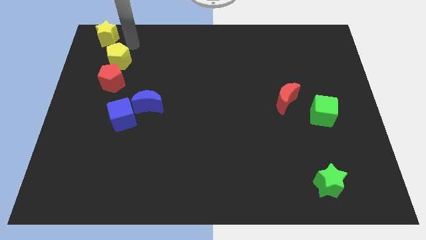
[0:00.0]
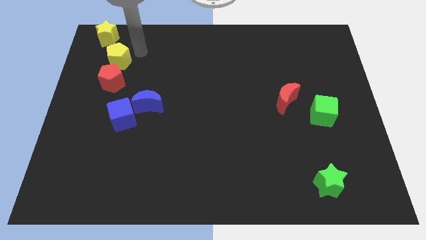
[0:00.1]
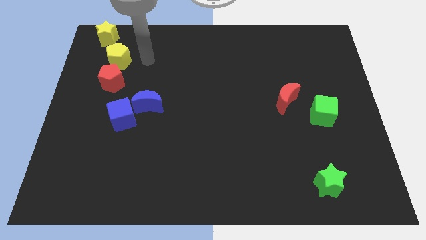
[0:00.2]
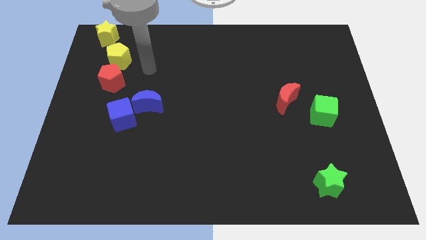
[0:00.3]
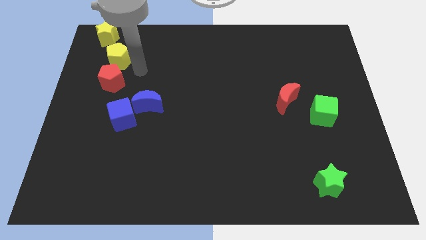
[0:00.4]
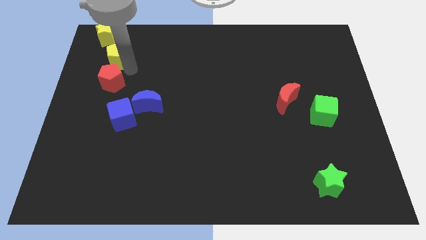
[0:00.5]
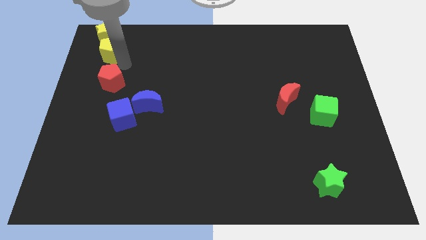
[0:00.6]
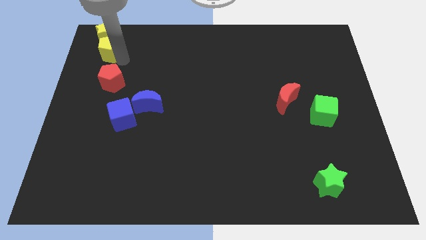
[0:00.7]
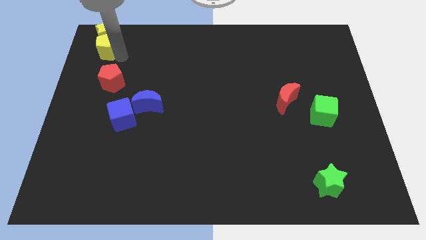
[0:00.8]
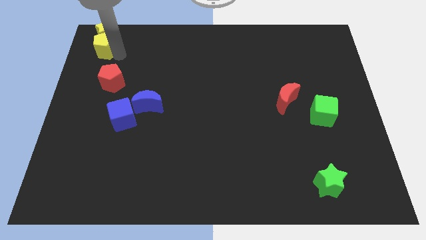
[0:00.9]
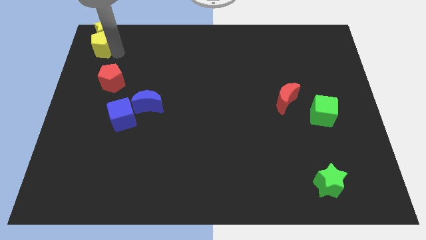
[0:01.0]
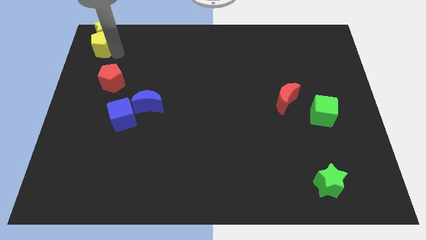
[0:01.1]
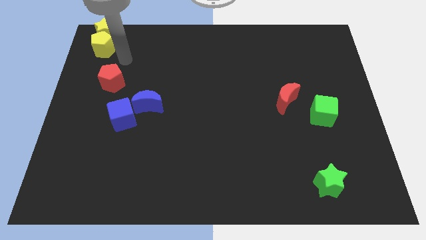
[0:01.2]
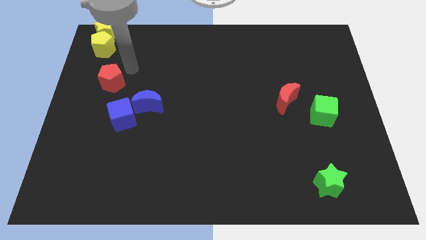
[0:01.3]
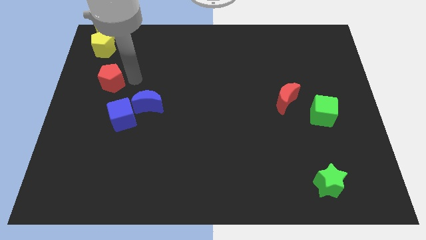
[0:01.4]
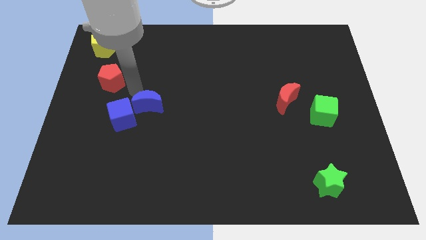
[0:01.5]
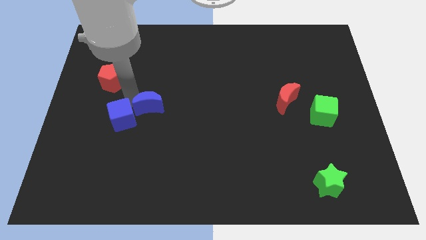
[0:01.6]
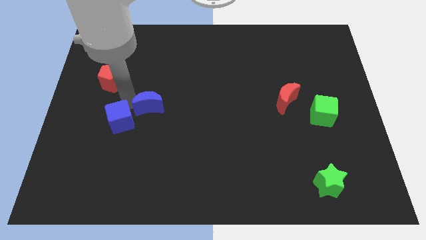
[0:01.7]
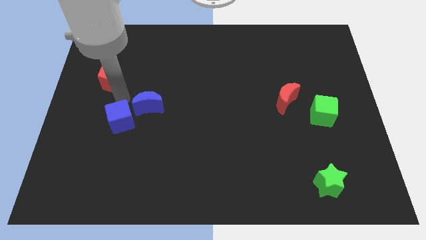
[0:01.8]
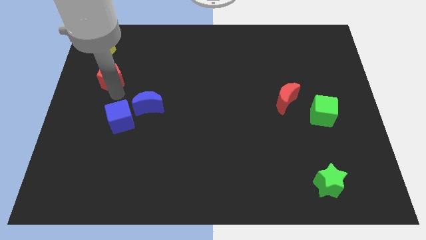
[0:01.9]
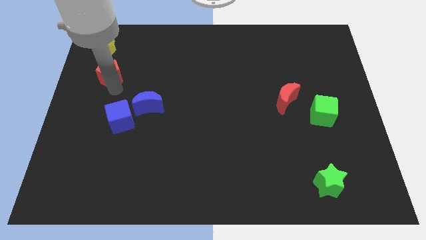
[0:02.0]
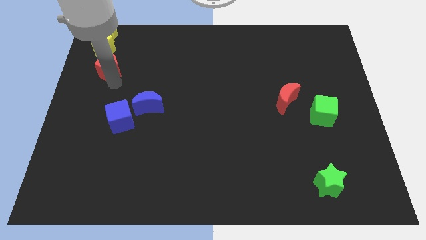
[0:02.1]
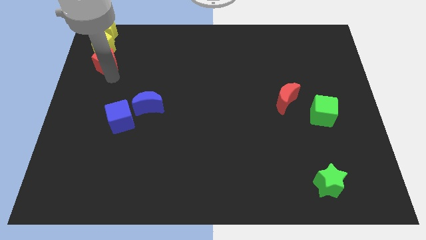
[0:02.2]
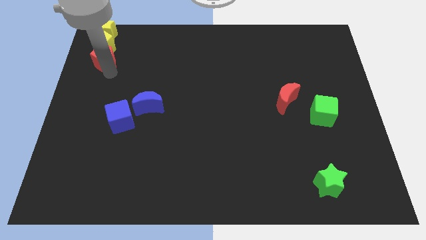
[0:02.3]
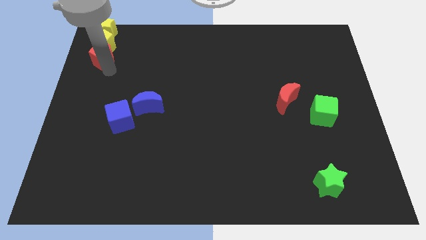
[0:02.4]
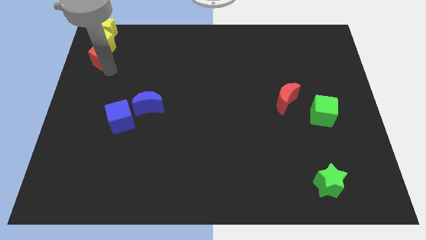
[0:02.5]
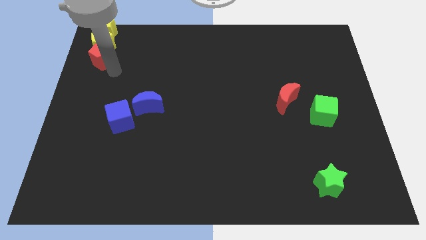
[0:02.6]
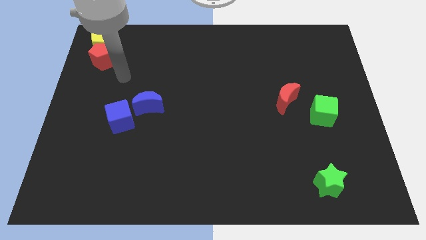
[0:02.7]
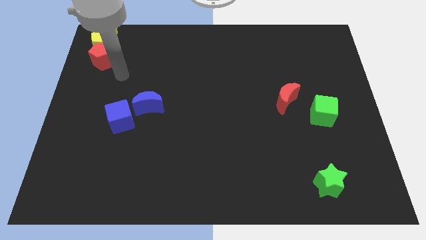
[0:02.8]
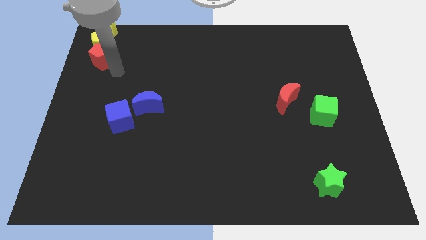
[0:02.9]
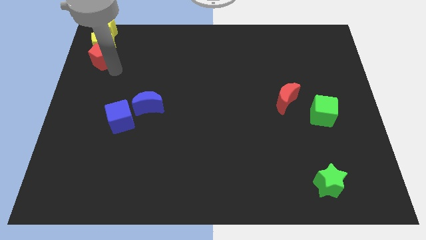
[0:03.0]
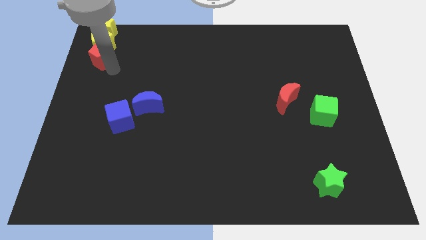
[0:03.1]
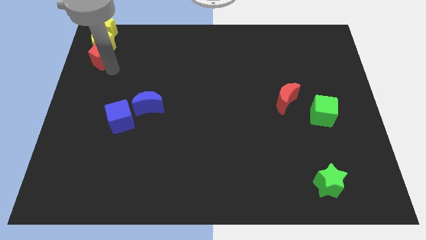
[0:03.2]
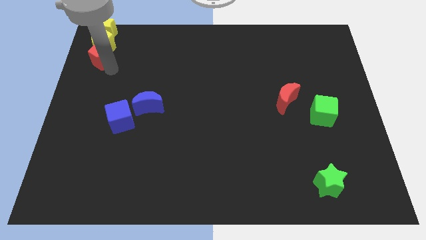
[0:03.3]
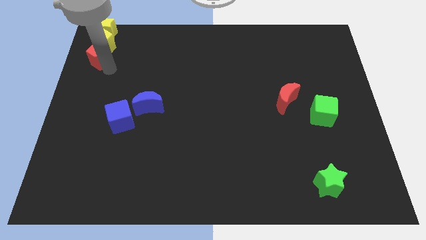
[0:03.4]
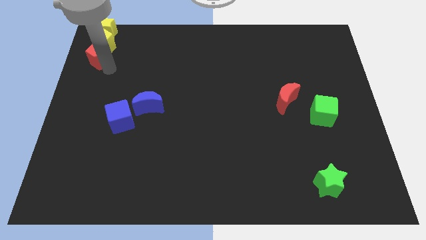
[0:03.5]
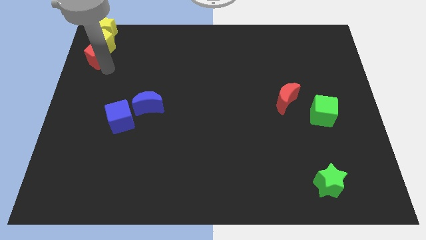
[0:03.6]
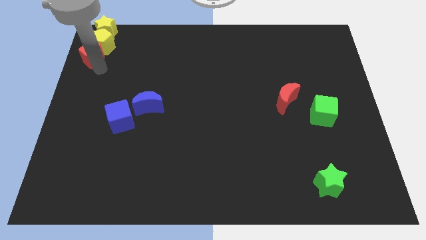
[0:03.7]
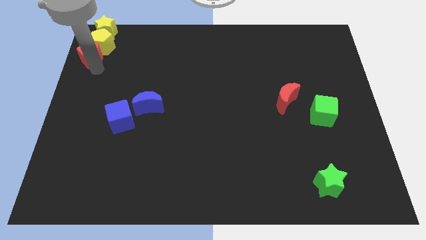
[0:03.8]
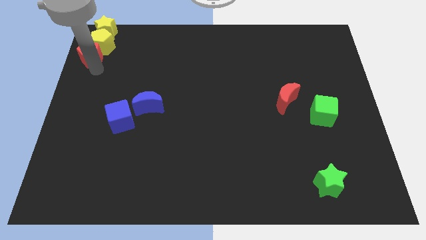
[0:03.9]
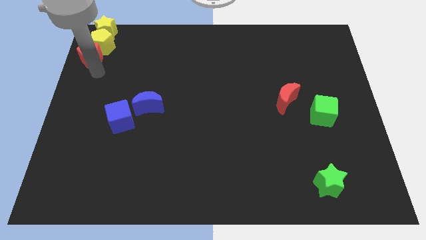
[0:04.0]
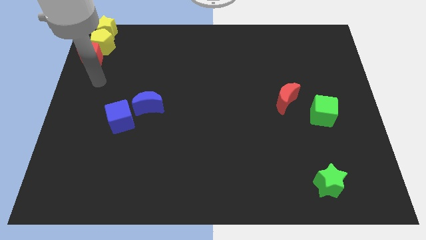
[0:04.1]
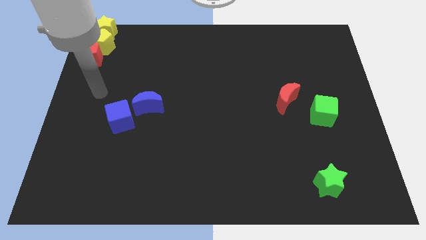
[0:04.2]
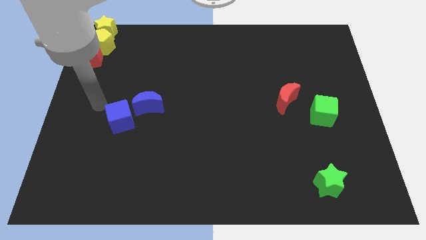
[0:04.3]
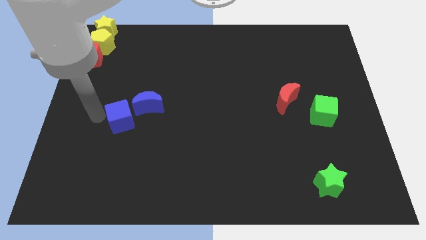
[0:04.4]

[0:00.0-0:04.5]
push the pentagons to the top left corner of the board

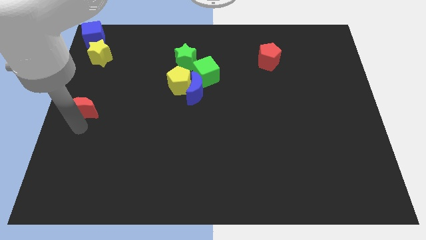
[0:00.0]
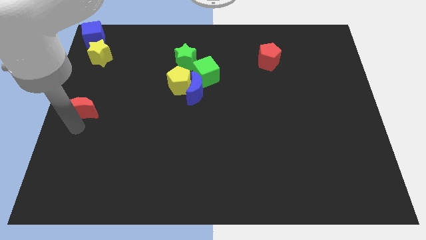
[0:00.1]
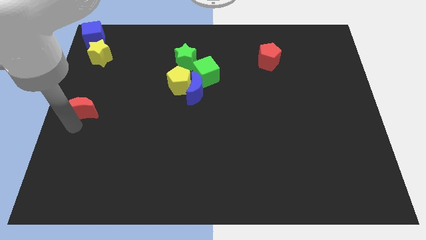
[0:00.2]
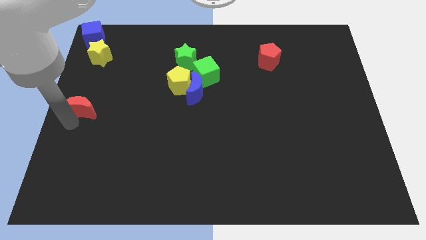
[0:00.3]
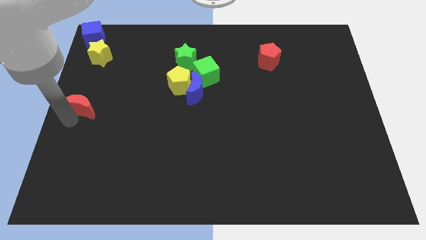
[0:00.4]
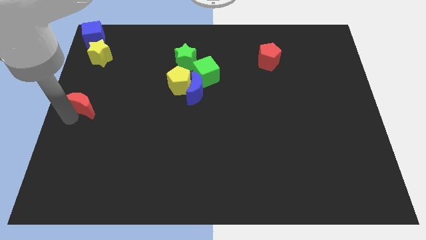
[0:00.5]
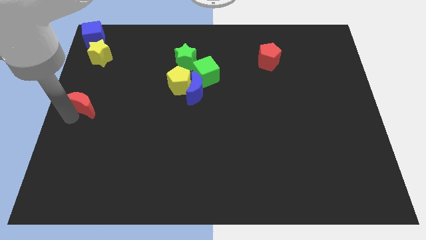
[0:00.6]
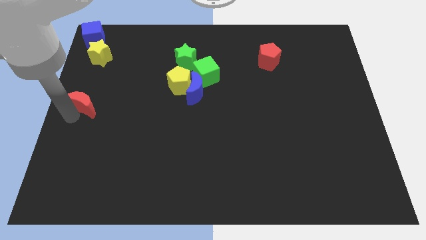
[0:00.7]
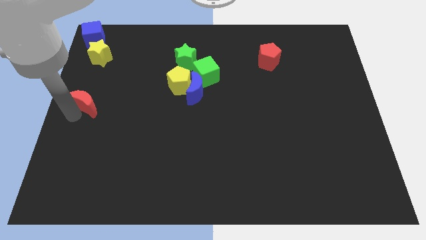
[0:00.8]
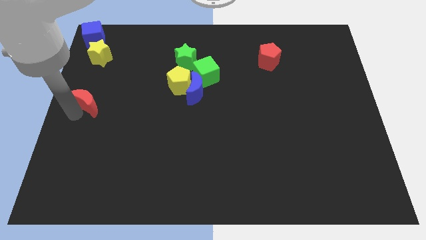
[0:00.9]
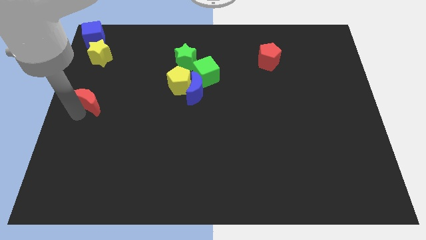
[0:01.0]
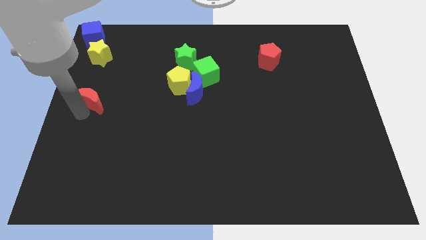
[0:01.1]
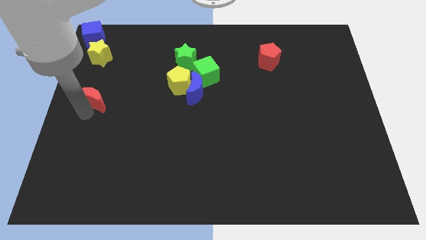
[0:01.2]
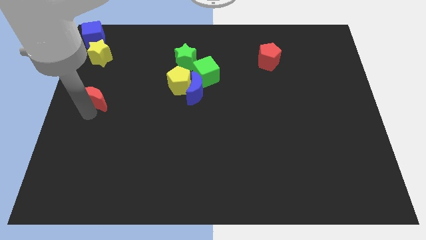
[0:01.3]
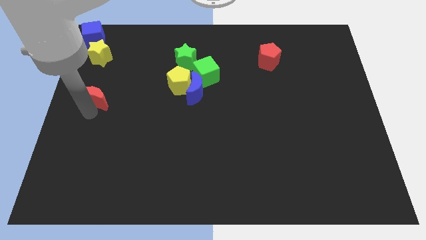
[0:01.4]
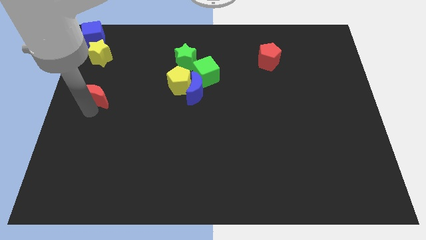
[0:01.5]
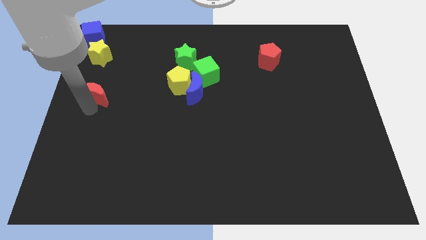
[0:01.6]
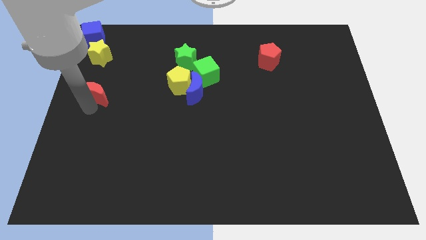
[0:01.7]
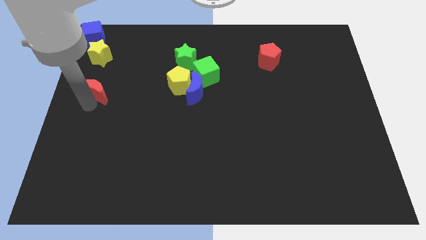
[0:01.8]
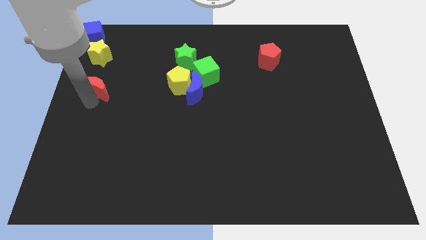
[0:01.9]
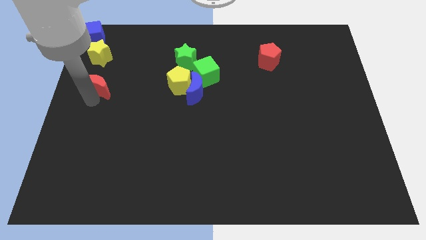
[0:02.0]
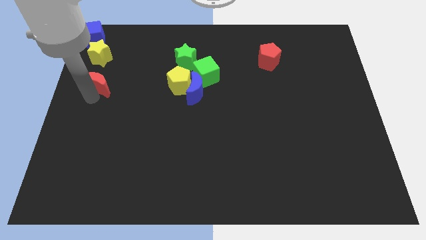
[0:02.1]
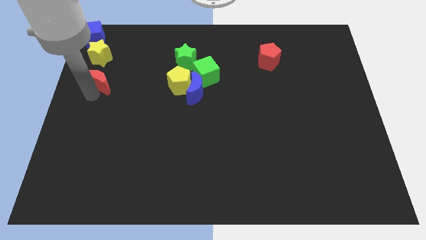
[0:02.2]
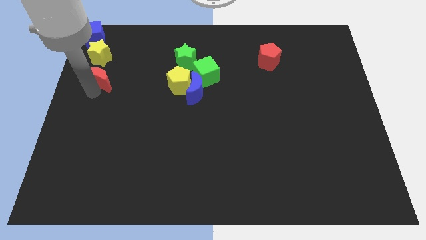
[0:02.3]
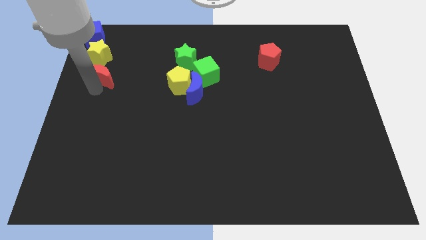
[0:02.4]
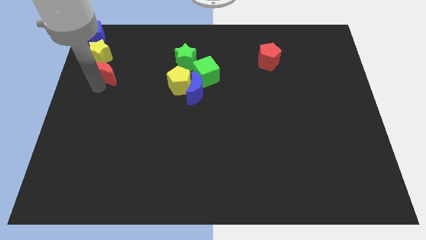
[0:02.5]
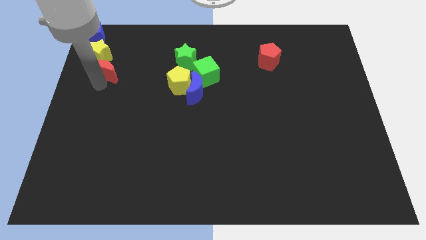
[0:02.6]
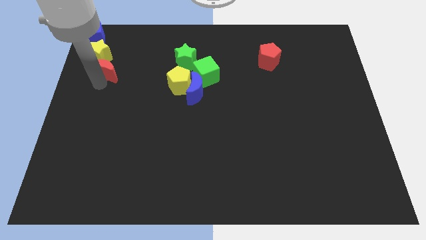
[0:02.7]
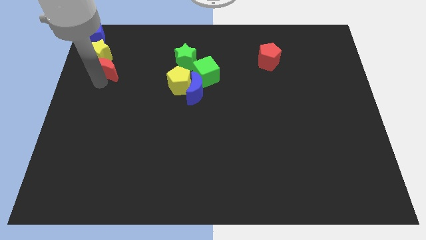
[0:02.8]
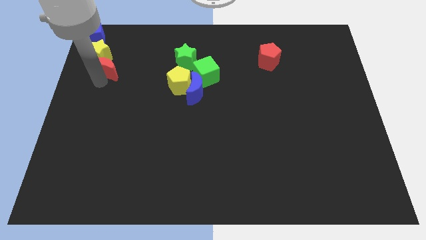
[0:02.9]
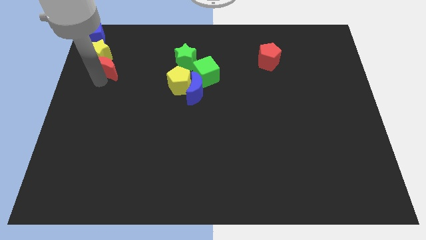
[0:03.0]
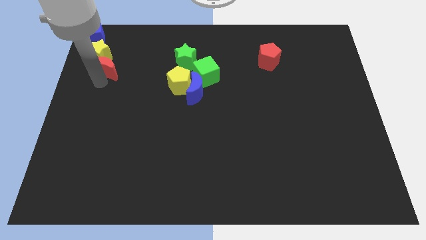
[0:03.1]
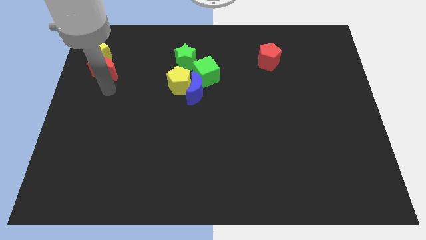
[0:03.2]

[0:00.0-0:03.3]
move red crescent diagonally below yellow star

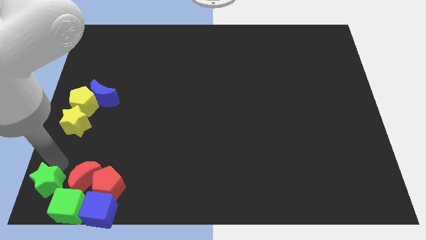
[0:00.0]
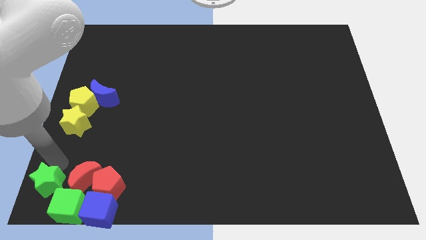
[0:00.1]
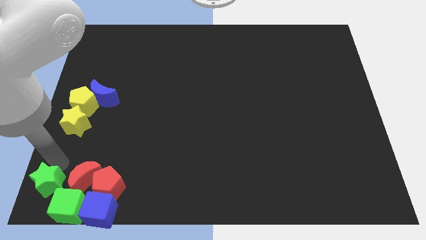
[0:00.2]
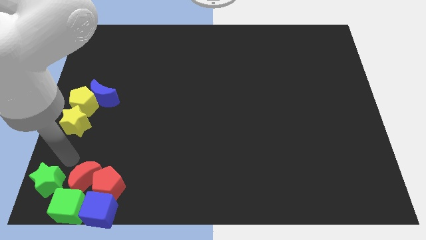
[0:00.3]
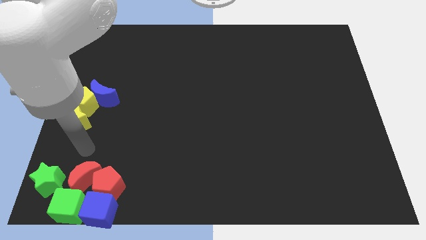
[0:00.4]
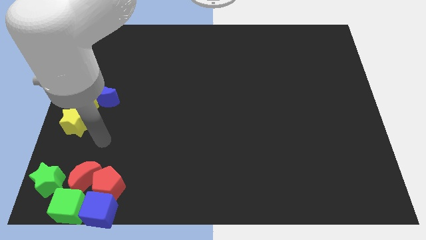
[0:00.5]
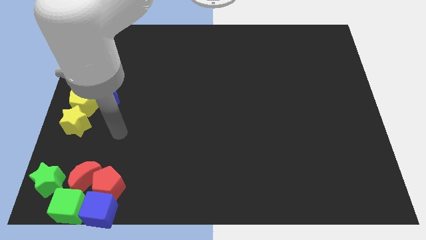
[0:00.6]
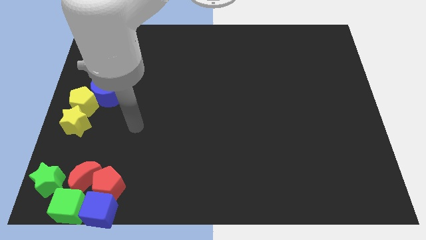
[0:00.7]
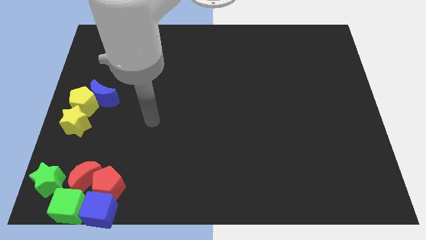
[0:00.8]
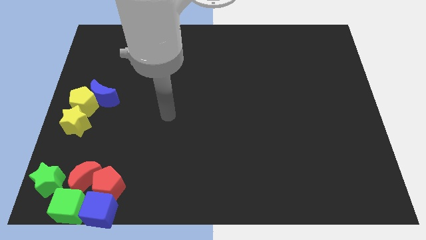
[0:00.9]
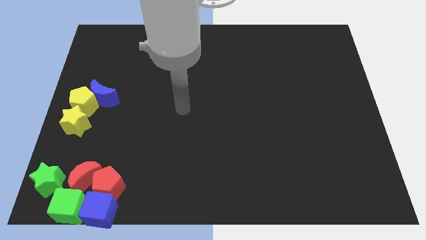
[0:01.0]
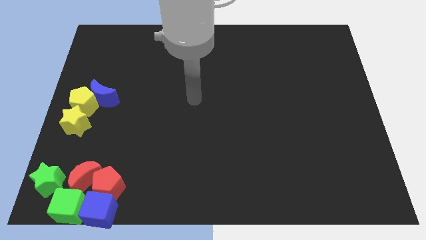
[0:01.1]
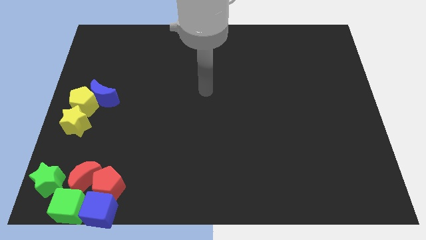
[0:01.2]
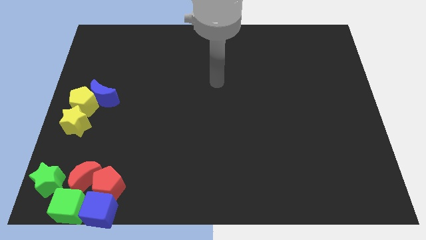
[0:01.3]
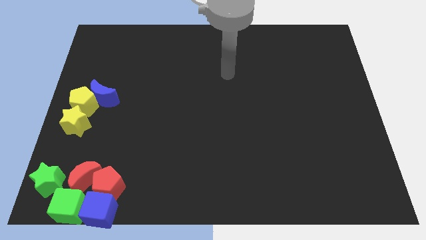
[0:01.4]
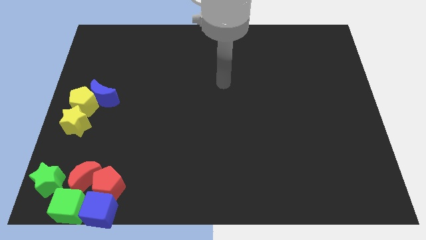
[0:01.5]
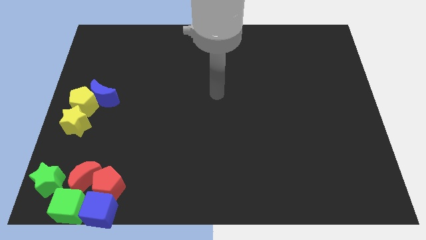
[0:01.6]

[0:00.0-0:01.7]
move your arm away from the green star
